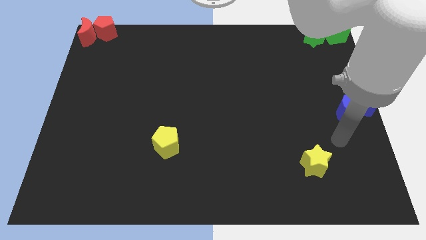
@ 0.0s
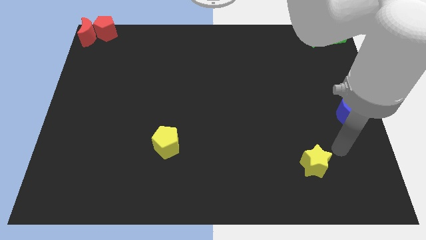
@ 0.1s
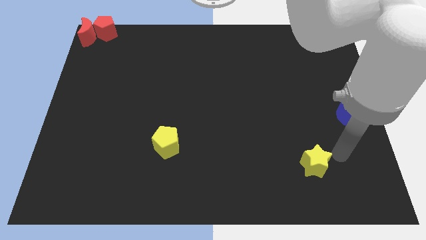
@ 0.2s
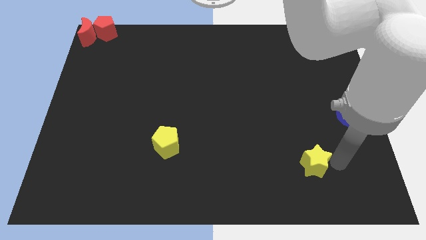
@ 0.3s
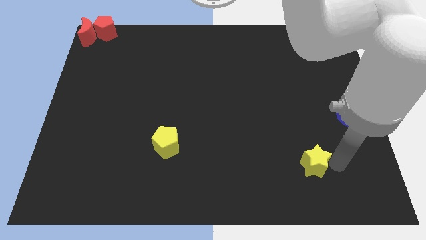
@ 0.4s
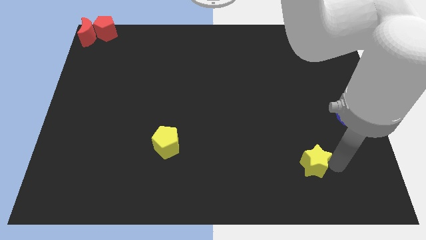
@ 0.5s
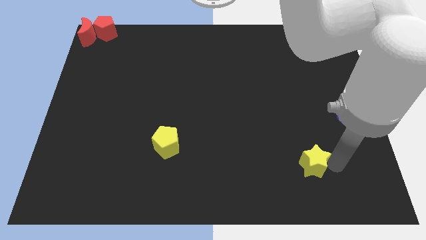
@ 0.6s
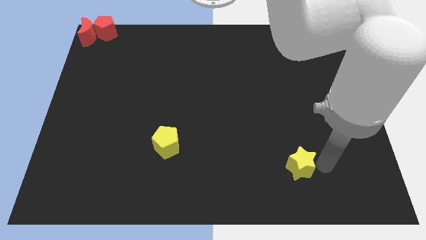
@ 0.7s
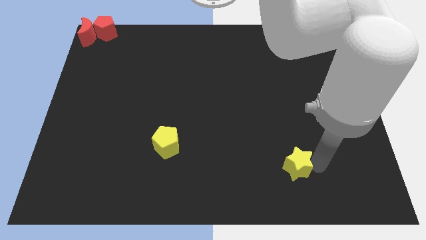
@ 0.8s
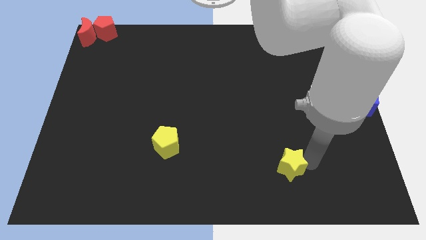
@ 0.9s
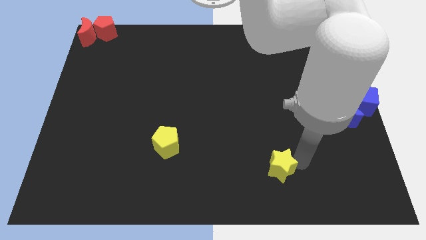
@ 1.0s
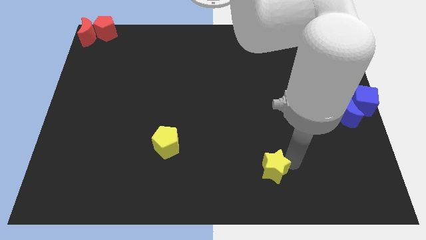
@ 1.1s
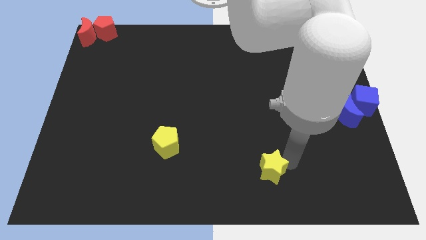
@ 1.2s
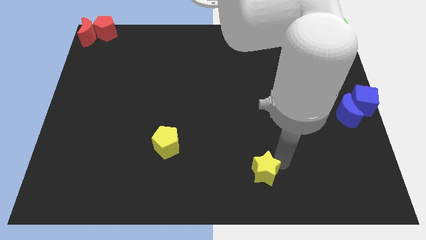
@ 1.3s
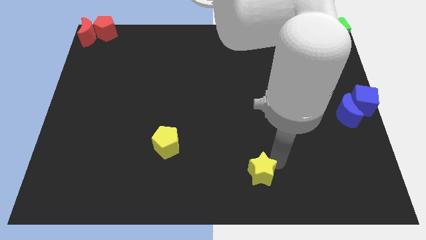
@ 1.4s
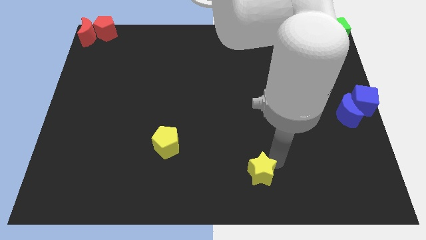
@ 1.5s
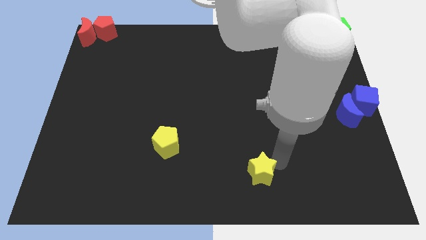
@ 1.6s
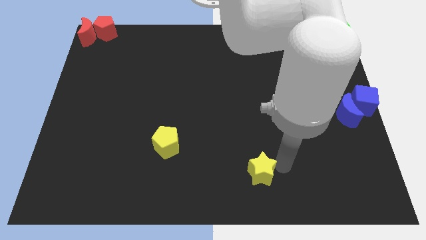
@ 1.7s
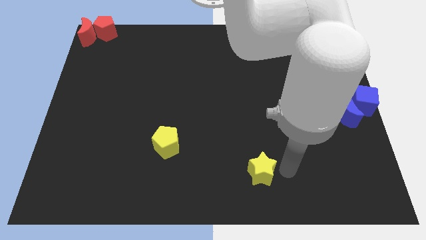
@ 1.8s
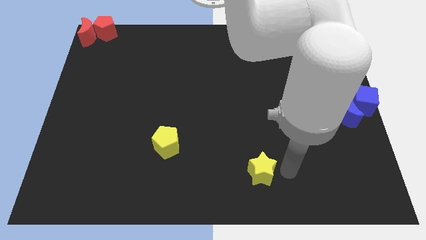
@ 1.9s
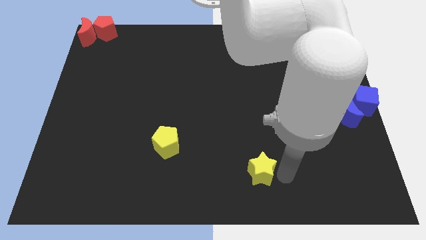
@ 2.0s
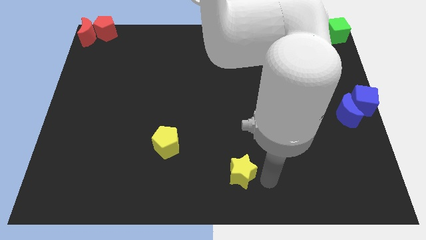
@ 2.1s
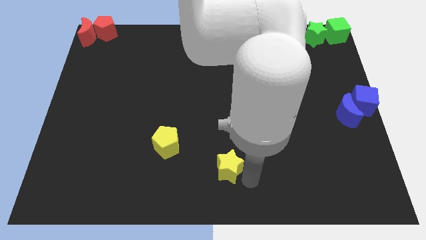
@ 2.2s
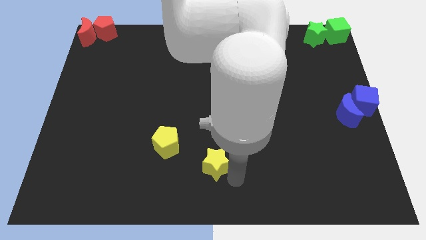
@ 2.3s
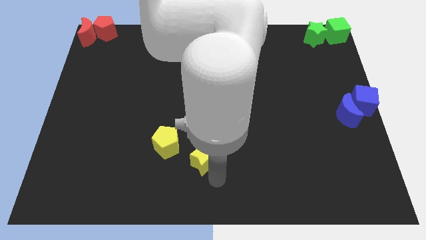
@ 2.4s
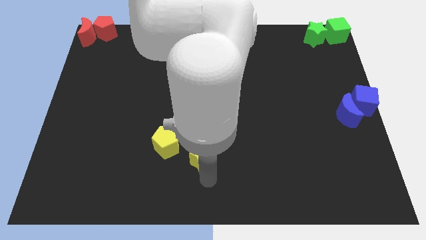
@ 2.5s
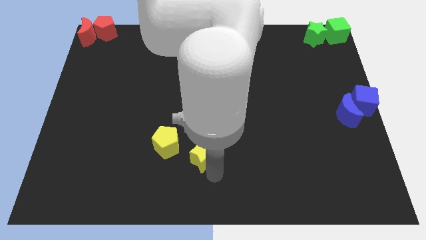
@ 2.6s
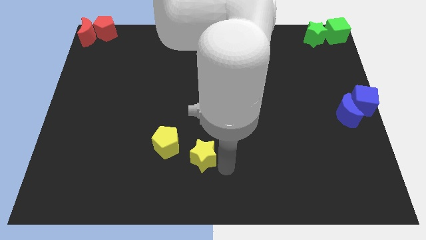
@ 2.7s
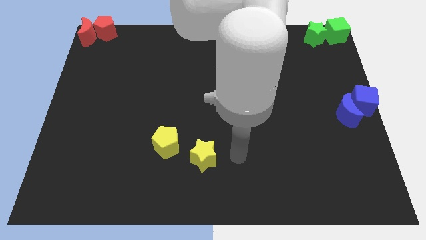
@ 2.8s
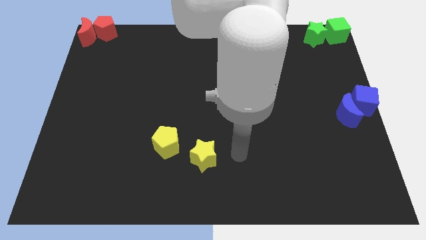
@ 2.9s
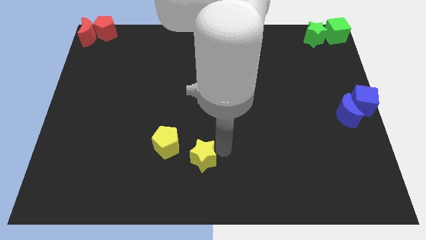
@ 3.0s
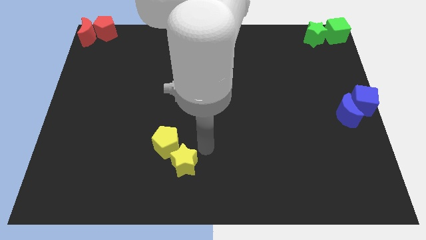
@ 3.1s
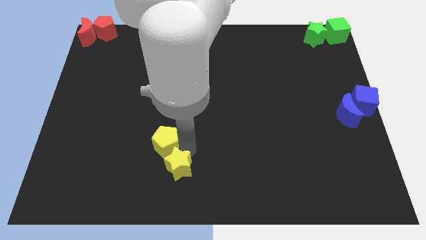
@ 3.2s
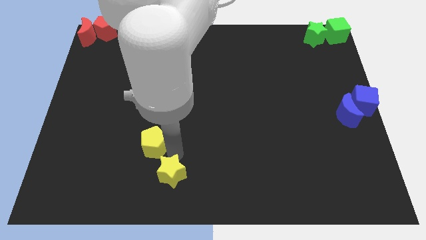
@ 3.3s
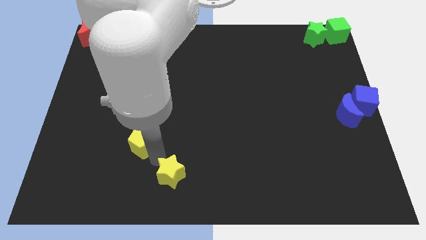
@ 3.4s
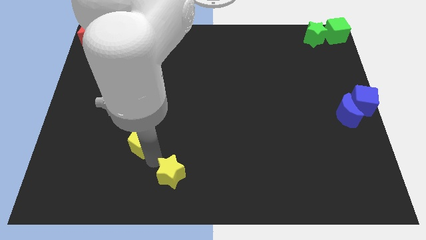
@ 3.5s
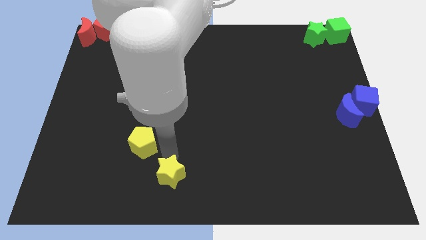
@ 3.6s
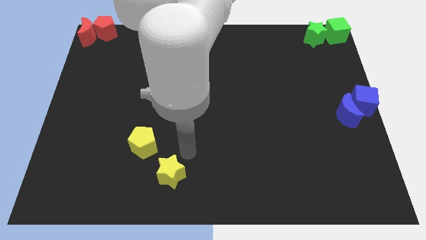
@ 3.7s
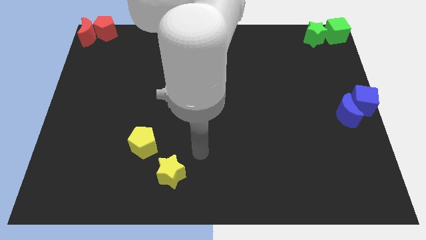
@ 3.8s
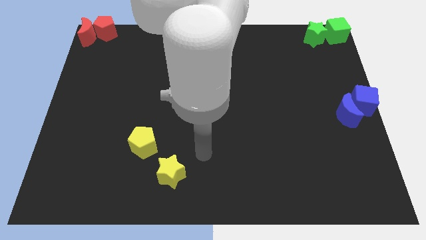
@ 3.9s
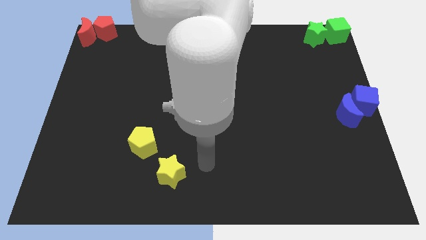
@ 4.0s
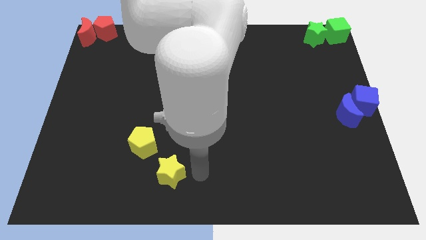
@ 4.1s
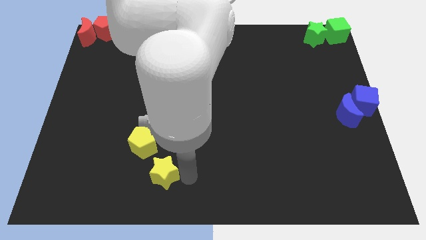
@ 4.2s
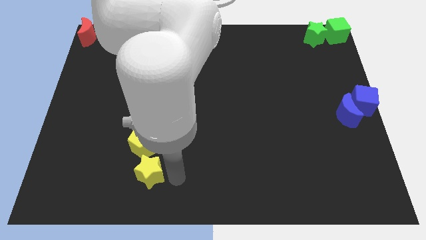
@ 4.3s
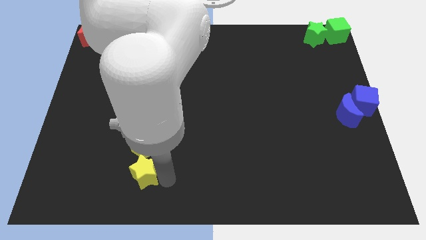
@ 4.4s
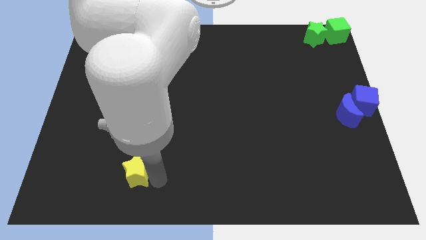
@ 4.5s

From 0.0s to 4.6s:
drag the yellow star to the bottom side of the yellow pentagon

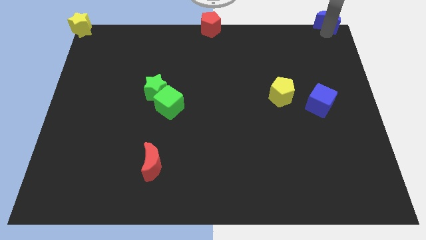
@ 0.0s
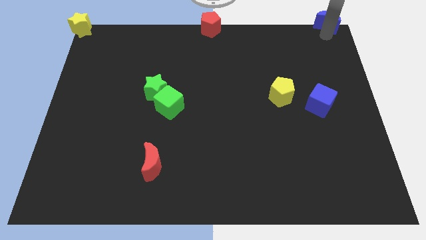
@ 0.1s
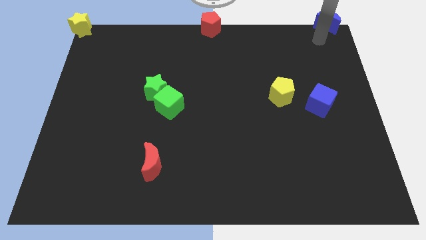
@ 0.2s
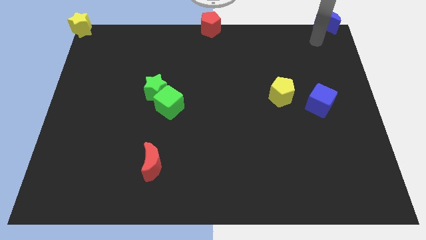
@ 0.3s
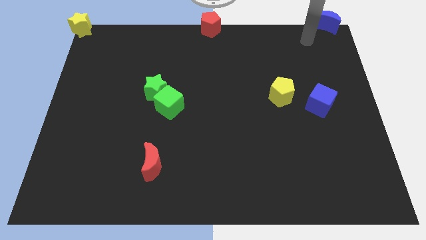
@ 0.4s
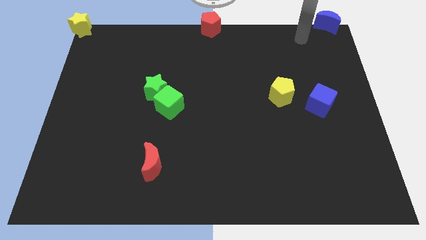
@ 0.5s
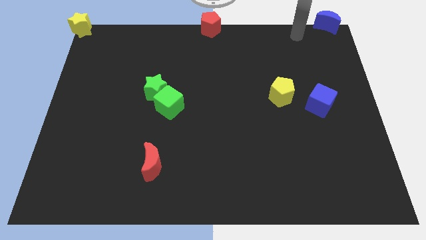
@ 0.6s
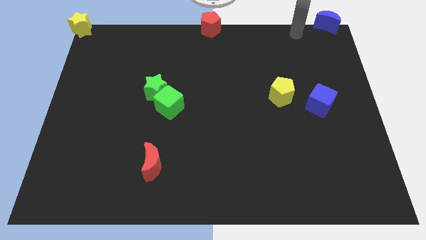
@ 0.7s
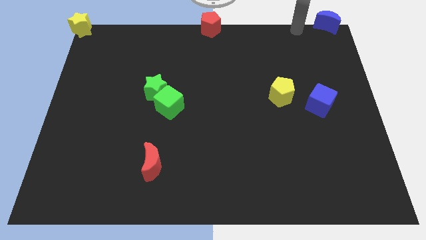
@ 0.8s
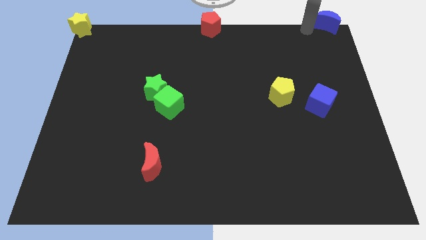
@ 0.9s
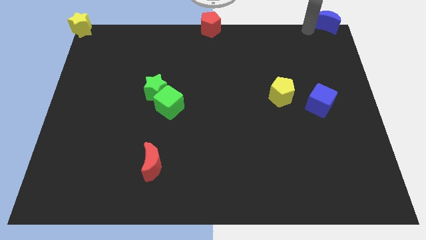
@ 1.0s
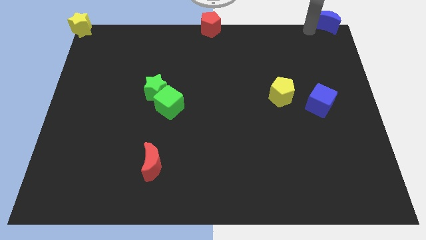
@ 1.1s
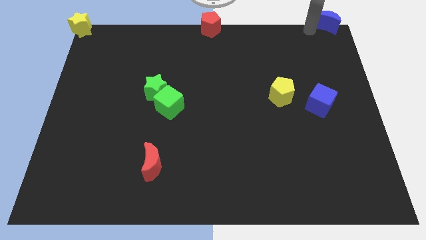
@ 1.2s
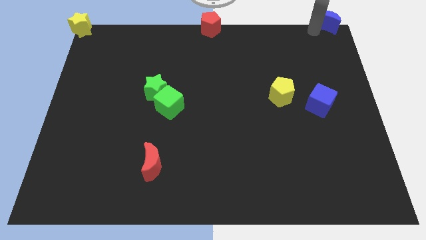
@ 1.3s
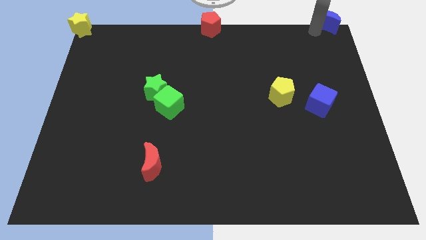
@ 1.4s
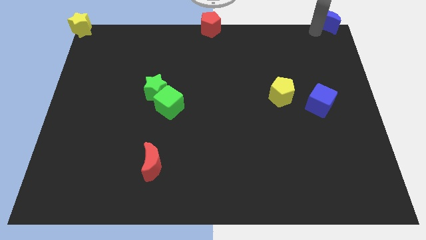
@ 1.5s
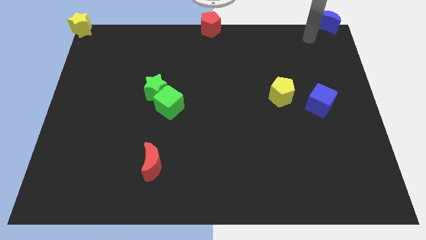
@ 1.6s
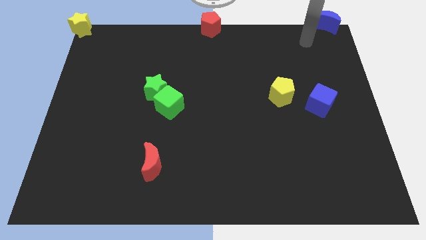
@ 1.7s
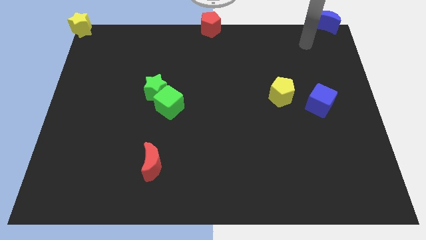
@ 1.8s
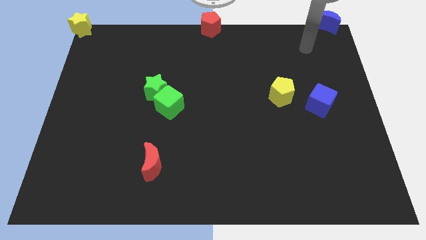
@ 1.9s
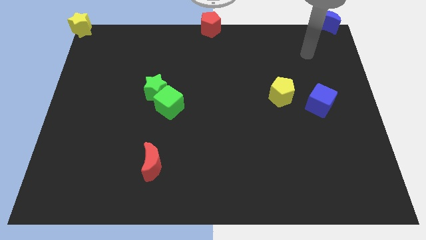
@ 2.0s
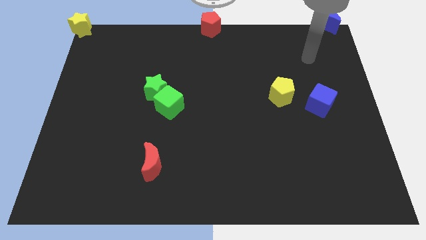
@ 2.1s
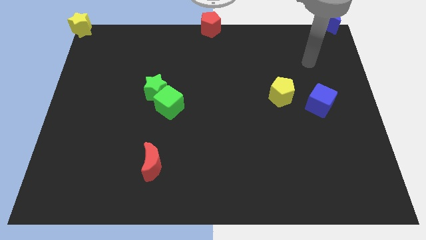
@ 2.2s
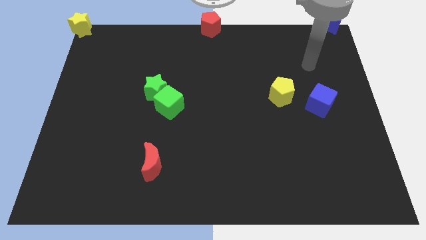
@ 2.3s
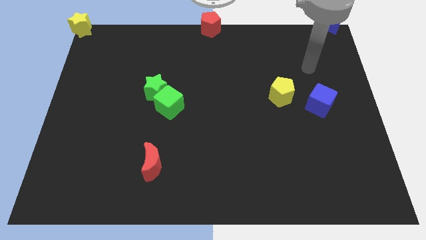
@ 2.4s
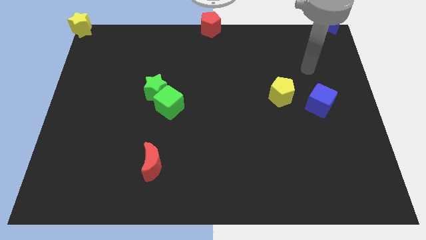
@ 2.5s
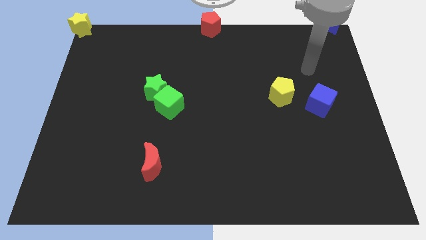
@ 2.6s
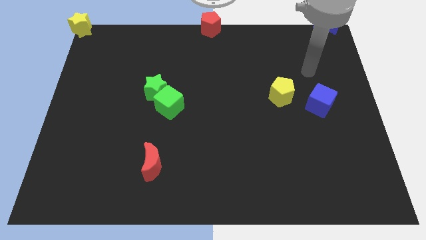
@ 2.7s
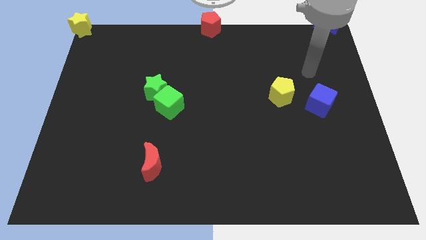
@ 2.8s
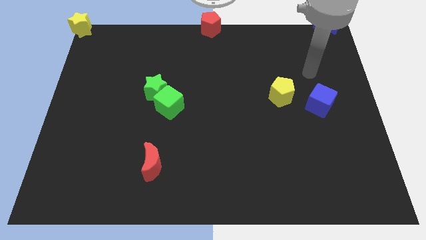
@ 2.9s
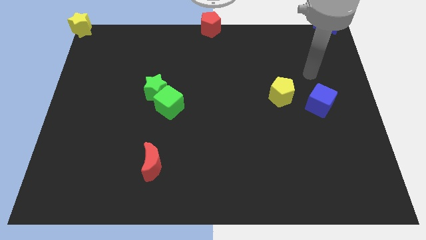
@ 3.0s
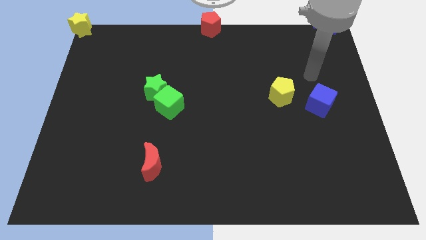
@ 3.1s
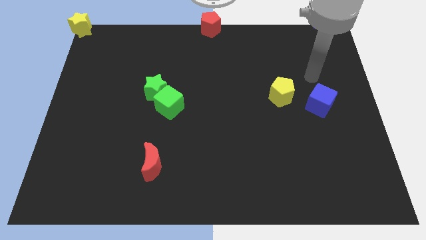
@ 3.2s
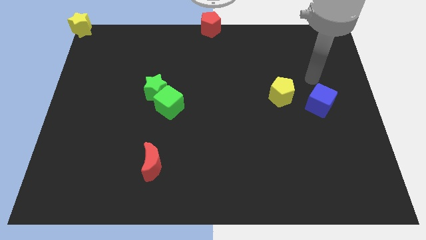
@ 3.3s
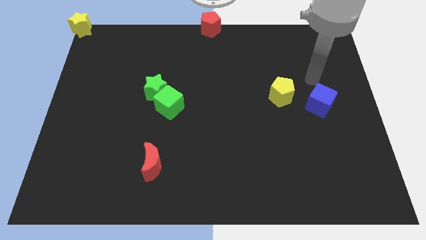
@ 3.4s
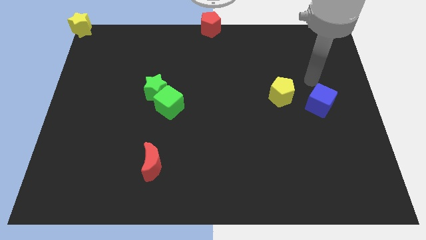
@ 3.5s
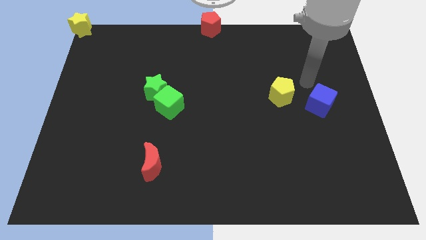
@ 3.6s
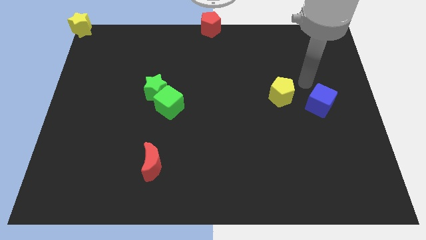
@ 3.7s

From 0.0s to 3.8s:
move away from the blue moon

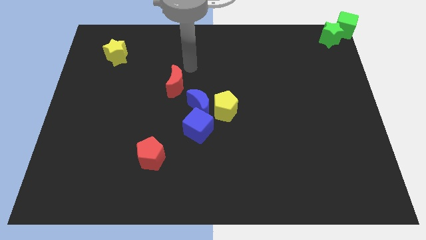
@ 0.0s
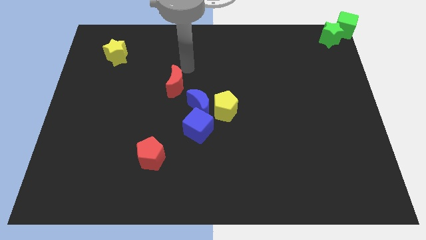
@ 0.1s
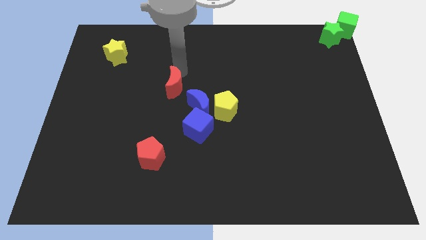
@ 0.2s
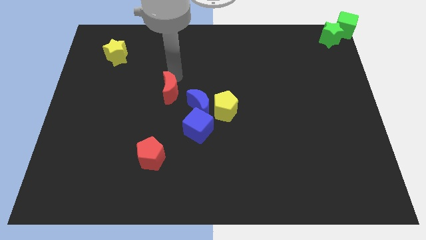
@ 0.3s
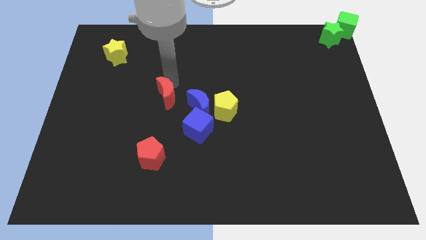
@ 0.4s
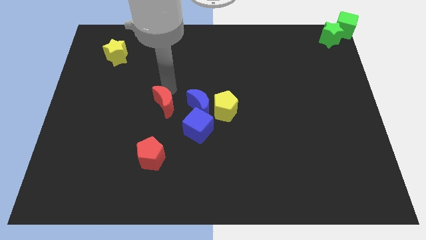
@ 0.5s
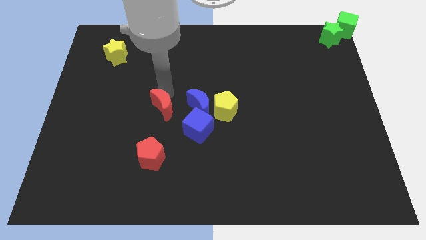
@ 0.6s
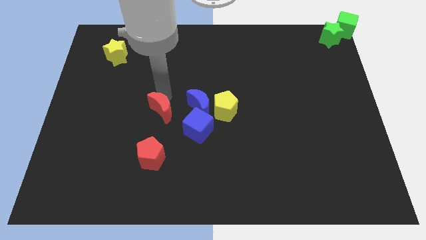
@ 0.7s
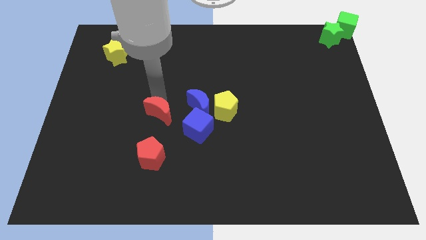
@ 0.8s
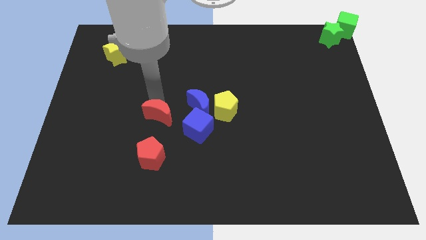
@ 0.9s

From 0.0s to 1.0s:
push the red crescent to the left of the blue cube
